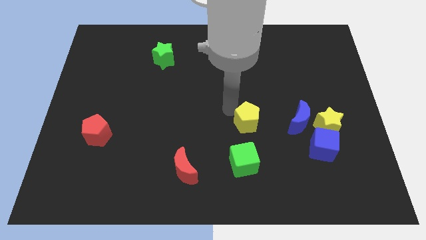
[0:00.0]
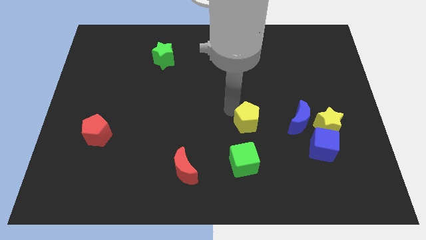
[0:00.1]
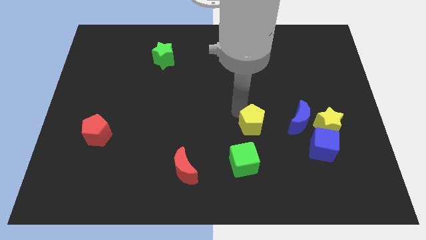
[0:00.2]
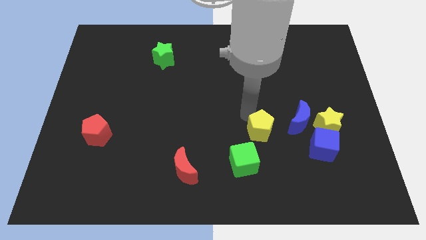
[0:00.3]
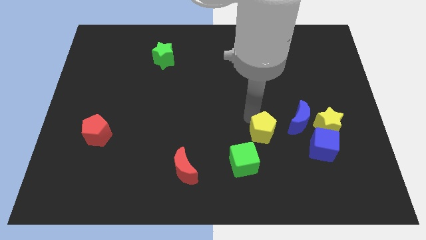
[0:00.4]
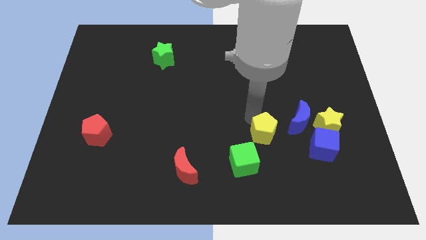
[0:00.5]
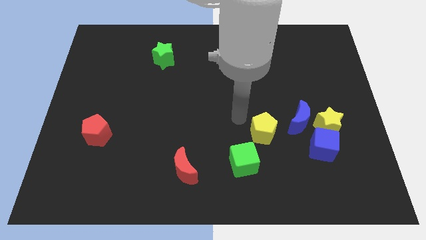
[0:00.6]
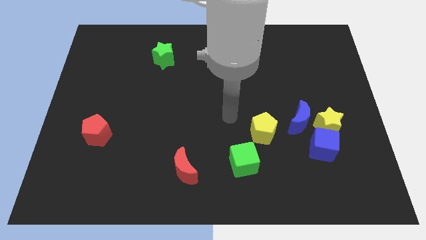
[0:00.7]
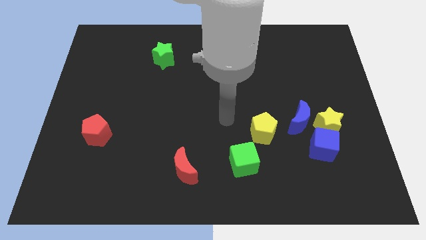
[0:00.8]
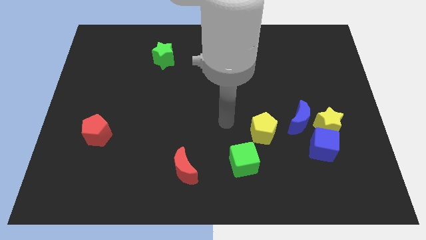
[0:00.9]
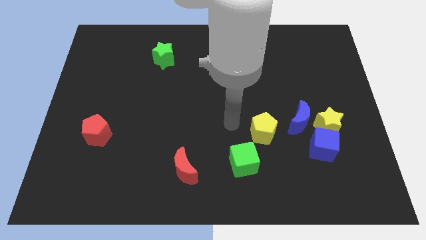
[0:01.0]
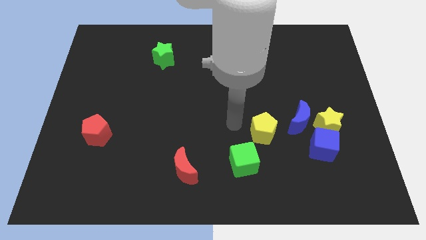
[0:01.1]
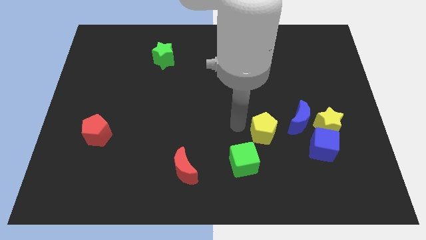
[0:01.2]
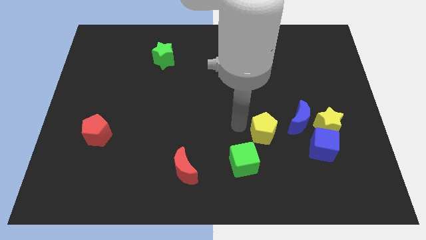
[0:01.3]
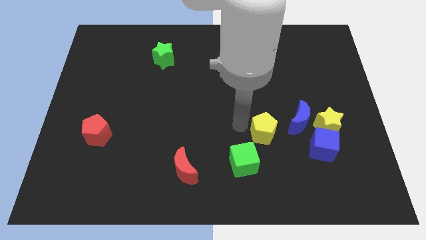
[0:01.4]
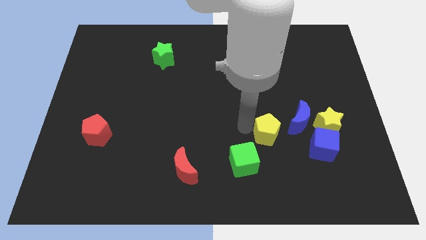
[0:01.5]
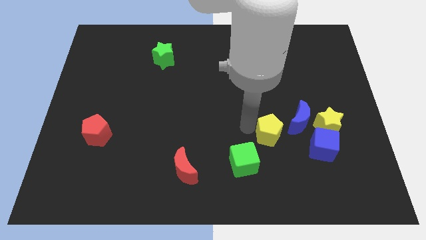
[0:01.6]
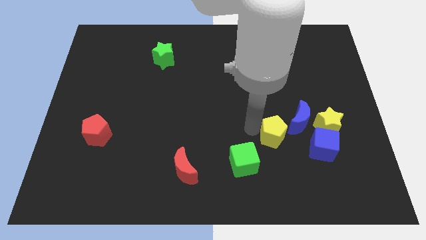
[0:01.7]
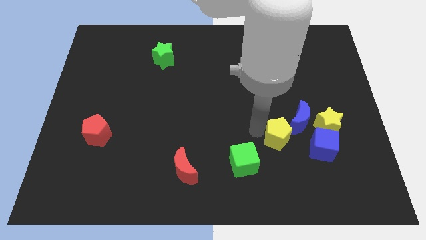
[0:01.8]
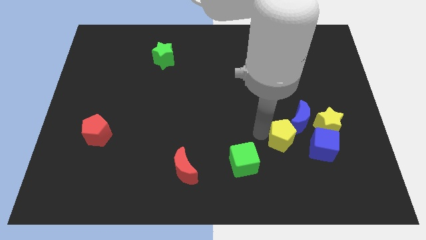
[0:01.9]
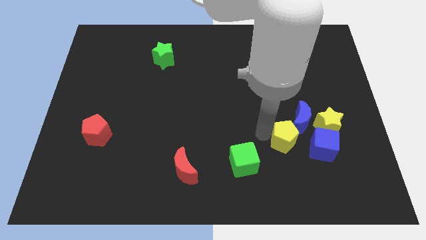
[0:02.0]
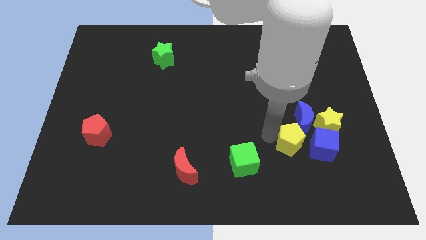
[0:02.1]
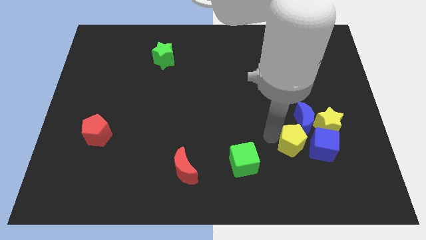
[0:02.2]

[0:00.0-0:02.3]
slide the yellow pentagon close to the blue cube

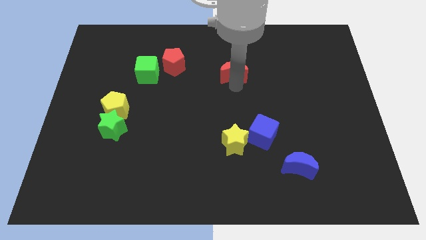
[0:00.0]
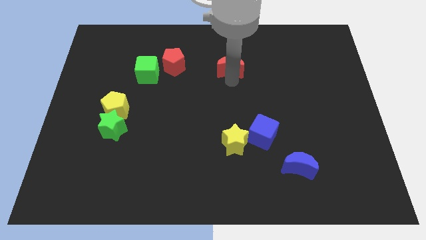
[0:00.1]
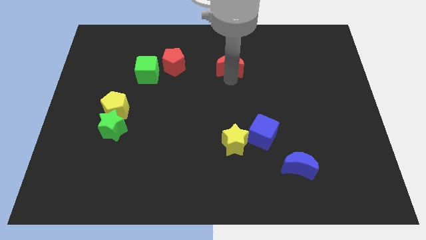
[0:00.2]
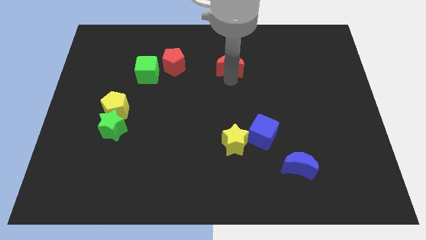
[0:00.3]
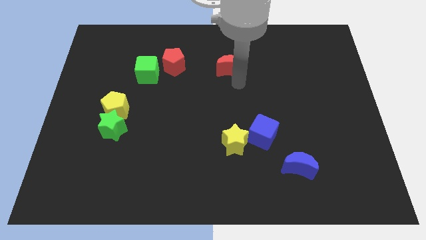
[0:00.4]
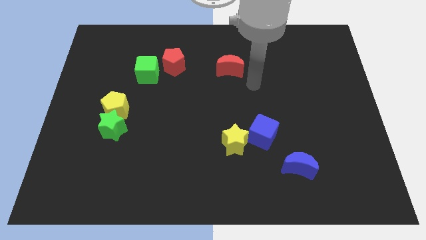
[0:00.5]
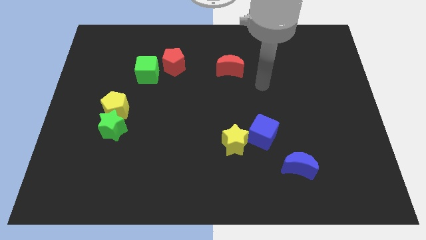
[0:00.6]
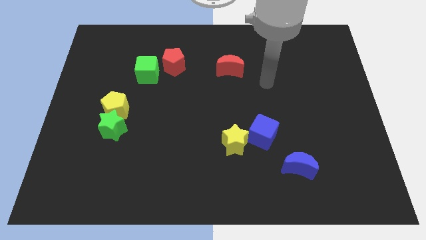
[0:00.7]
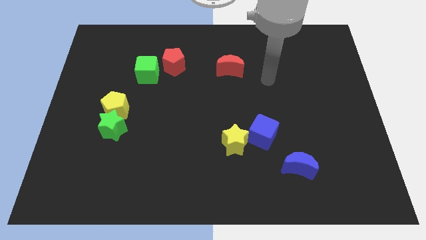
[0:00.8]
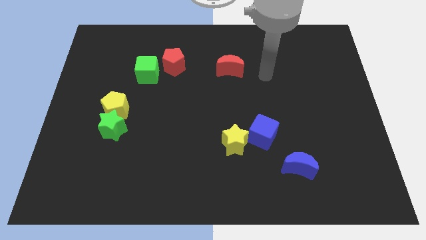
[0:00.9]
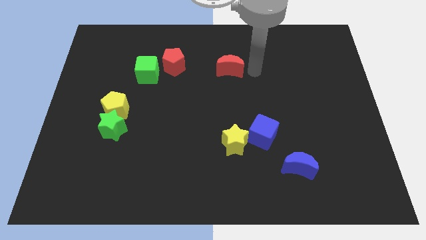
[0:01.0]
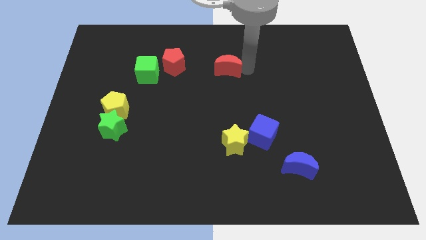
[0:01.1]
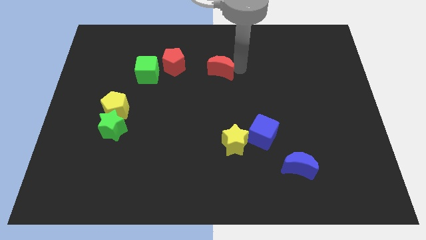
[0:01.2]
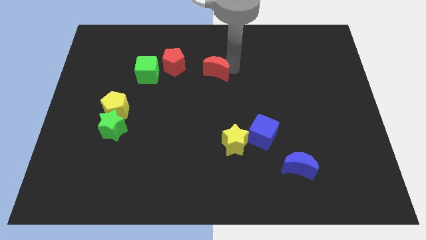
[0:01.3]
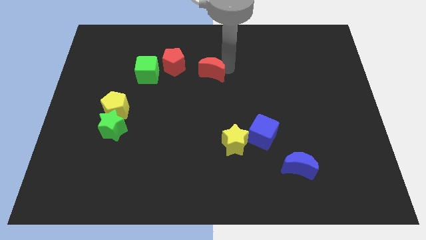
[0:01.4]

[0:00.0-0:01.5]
slide the red moon diagonally top left to the yellow star

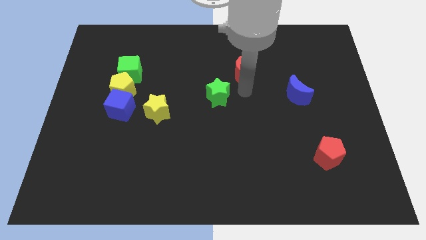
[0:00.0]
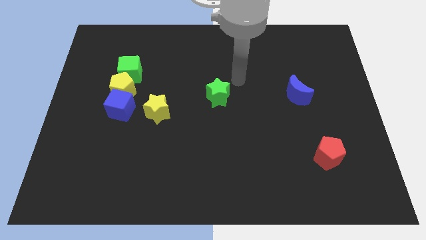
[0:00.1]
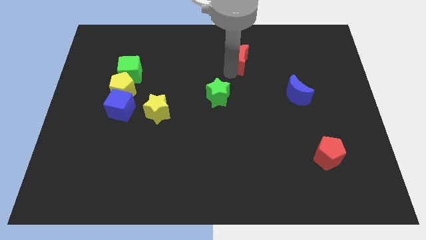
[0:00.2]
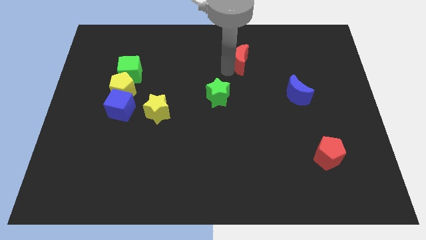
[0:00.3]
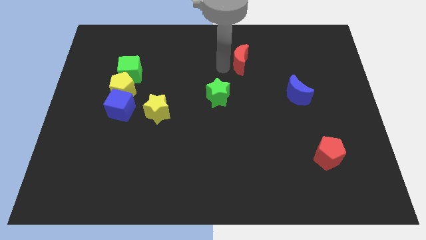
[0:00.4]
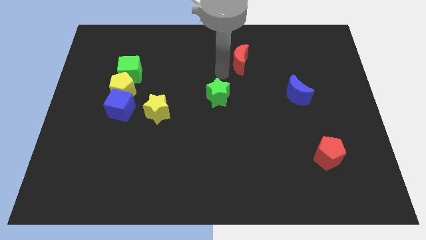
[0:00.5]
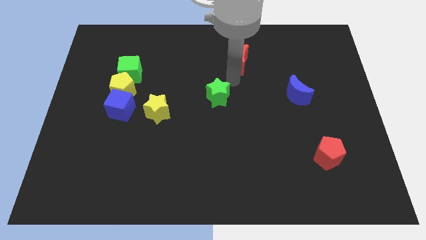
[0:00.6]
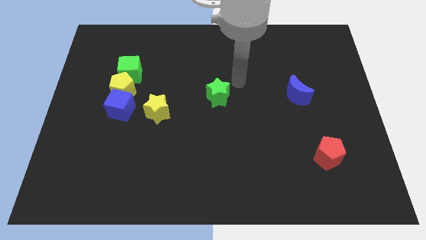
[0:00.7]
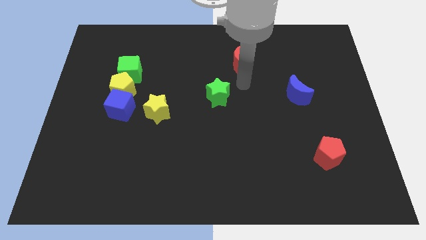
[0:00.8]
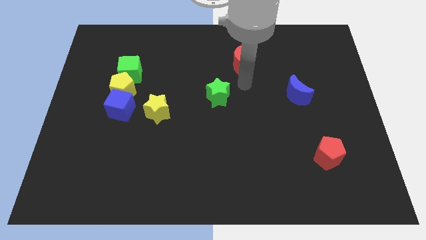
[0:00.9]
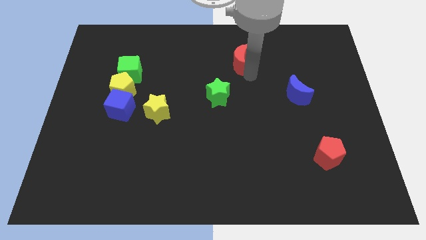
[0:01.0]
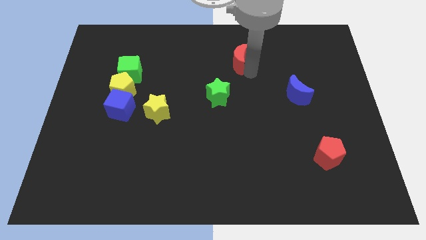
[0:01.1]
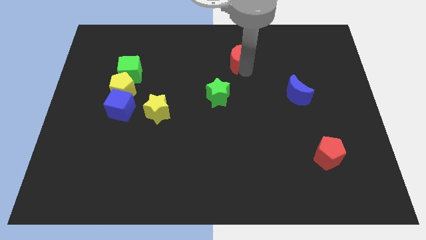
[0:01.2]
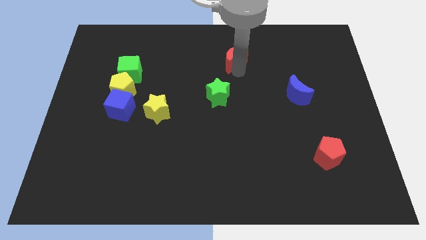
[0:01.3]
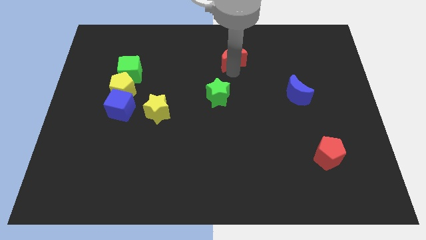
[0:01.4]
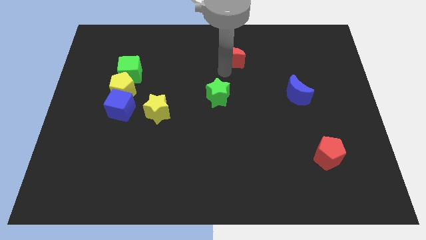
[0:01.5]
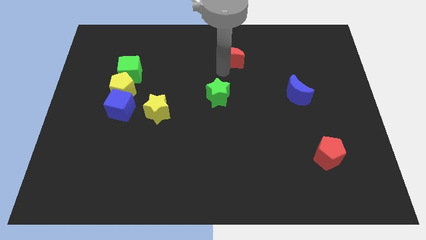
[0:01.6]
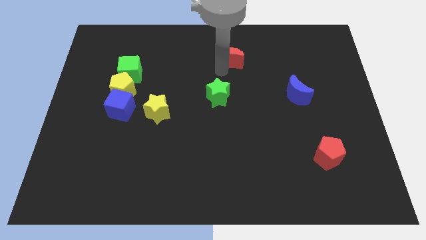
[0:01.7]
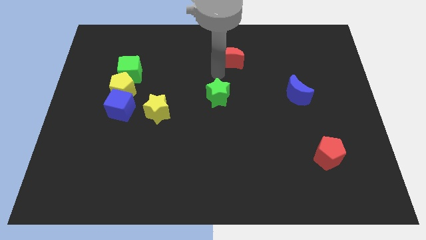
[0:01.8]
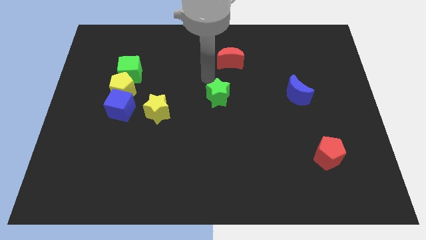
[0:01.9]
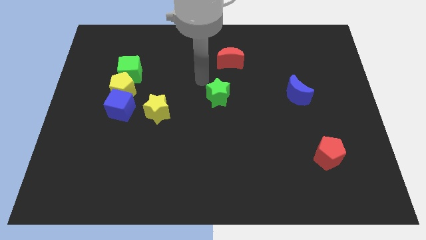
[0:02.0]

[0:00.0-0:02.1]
push the red crescent to the top of the green star

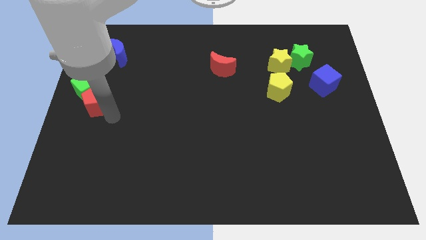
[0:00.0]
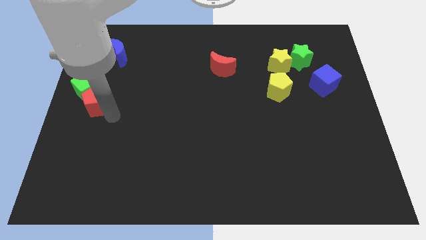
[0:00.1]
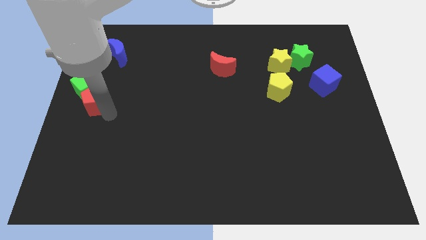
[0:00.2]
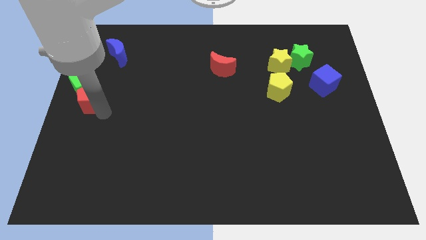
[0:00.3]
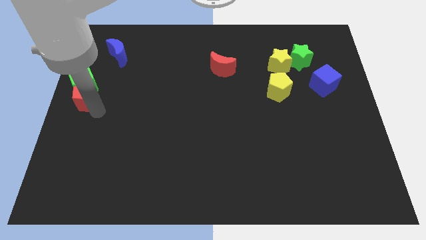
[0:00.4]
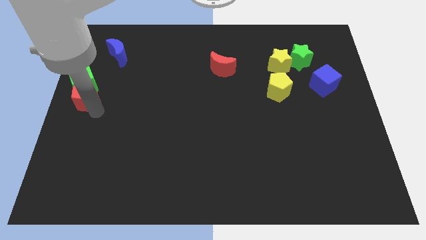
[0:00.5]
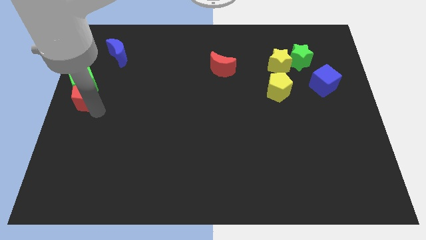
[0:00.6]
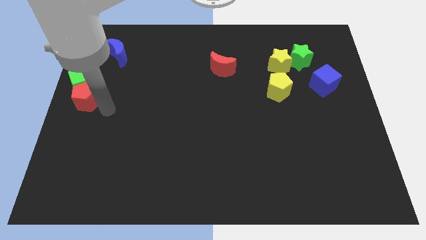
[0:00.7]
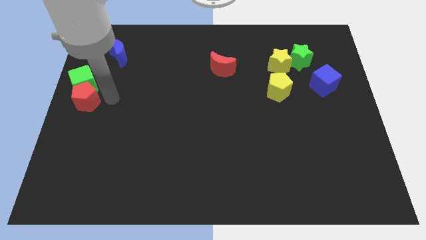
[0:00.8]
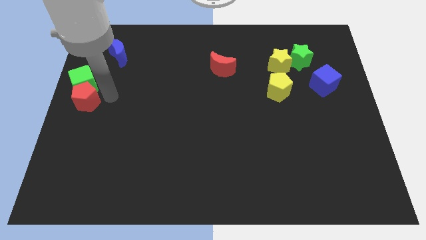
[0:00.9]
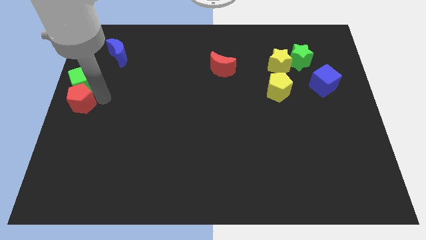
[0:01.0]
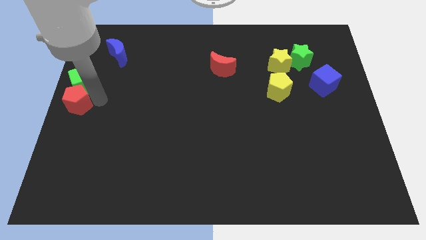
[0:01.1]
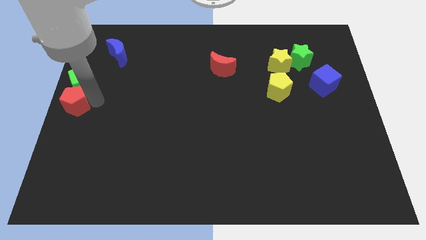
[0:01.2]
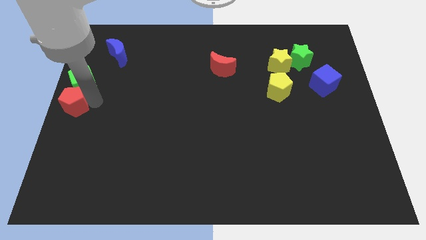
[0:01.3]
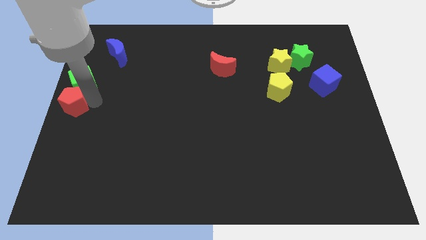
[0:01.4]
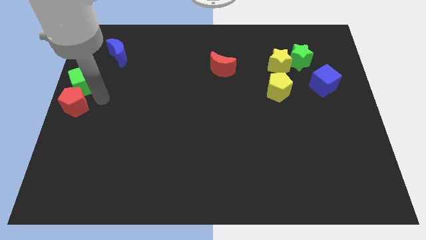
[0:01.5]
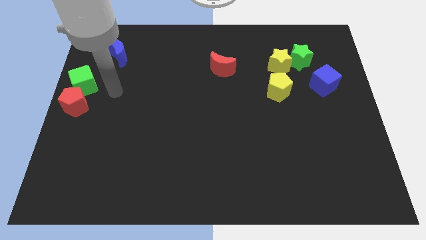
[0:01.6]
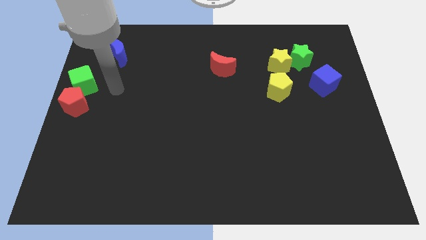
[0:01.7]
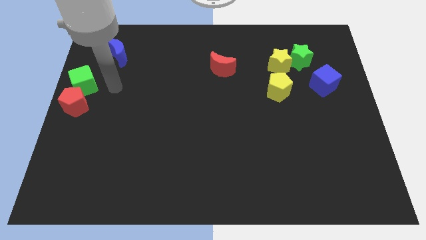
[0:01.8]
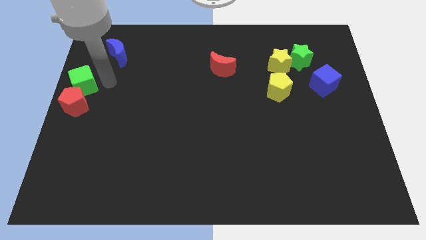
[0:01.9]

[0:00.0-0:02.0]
place the red pentagon below the green cube

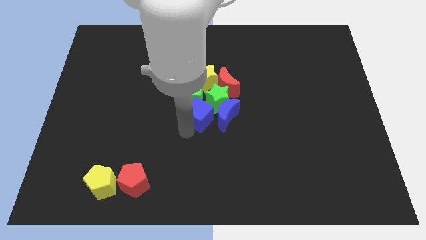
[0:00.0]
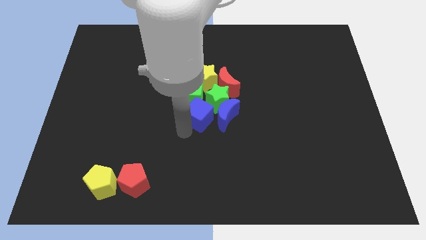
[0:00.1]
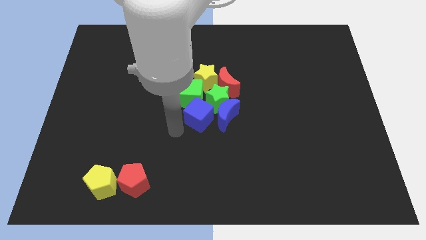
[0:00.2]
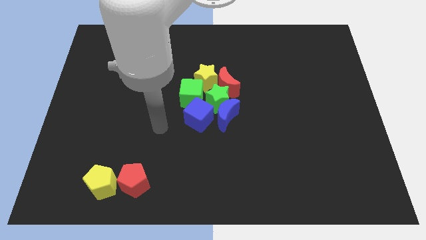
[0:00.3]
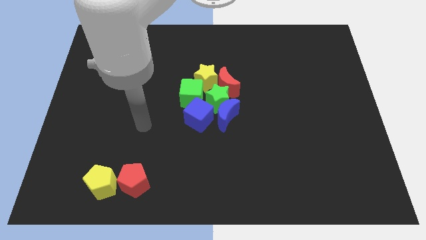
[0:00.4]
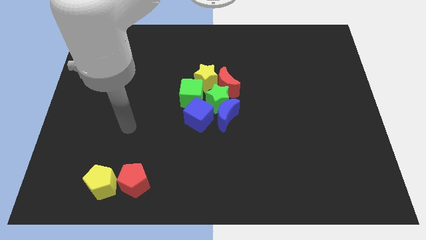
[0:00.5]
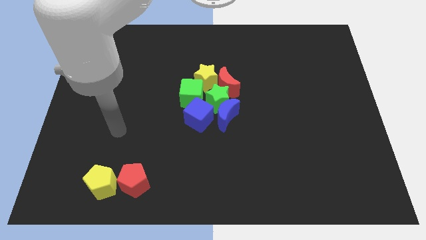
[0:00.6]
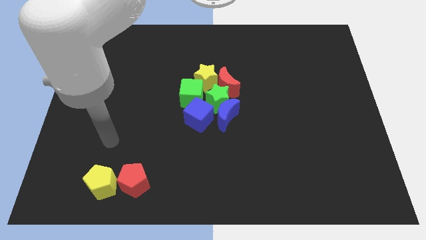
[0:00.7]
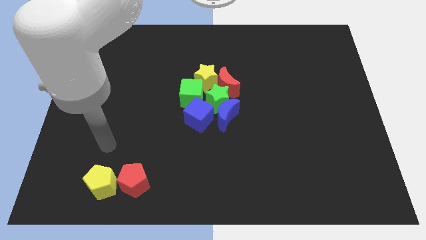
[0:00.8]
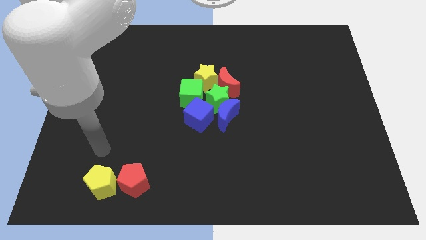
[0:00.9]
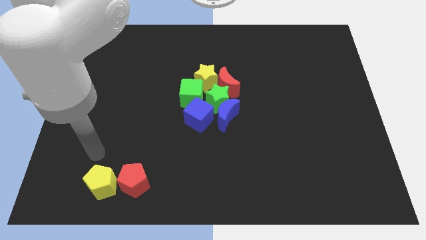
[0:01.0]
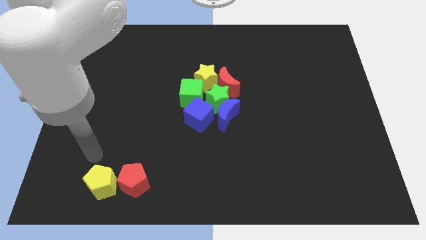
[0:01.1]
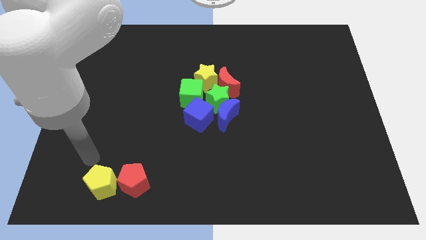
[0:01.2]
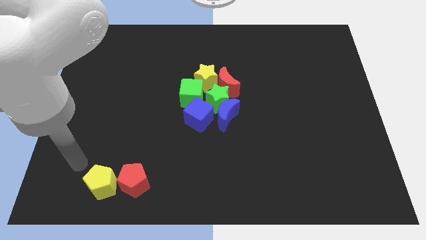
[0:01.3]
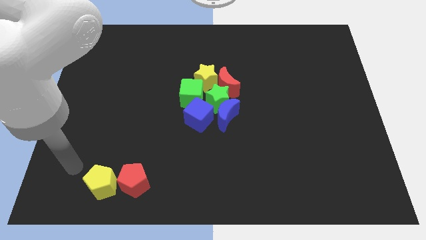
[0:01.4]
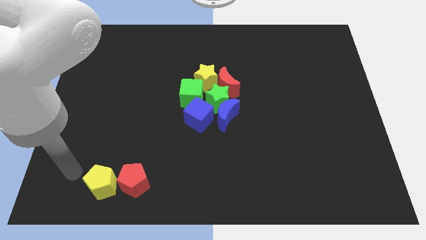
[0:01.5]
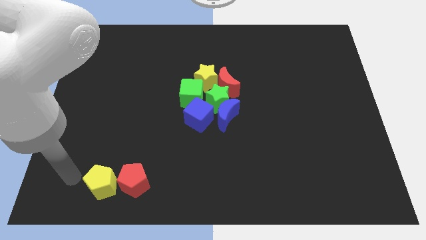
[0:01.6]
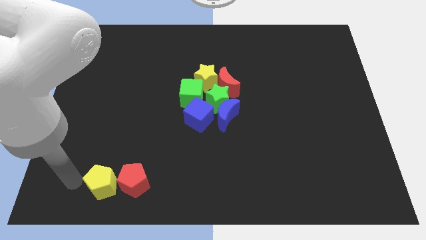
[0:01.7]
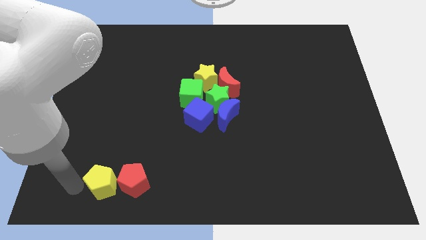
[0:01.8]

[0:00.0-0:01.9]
go away from the group of blocks
